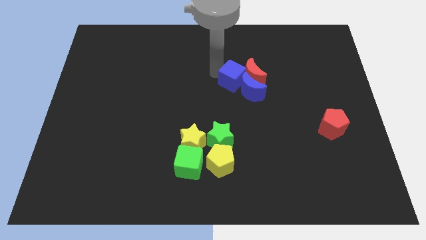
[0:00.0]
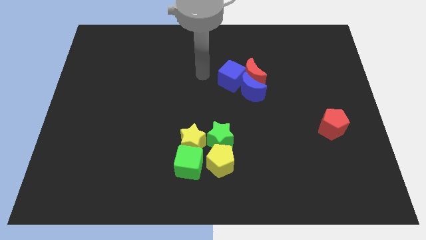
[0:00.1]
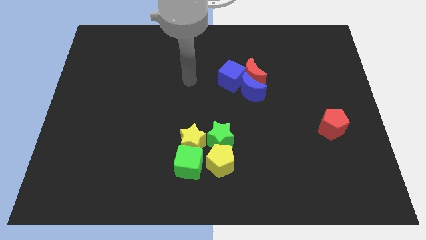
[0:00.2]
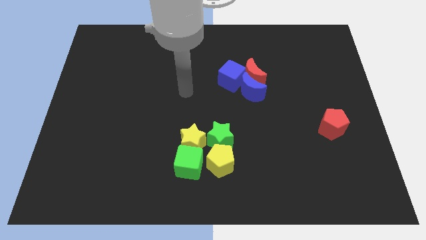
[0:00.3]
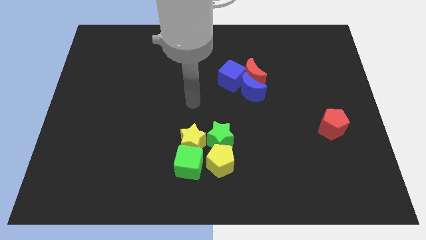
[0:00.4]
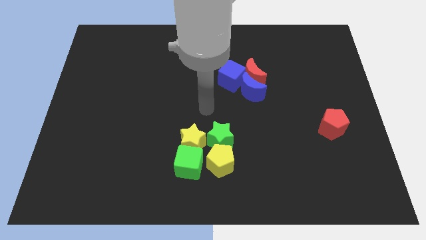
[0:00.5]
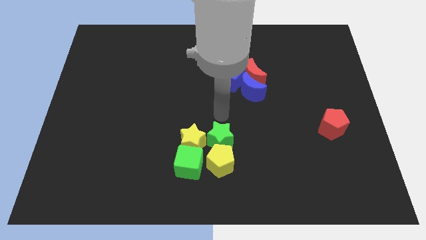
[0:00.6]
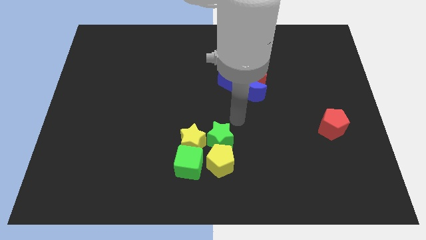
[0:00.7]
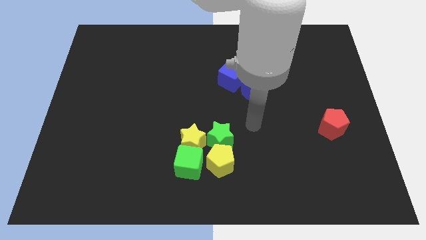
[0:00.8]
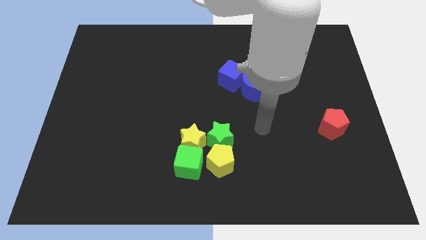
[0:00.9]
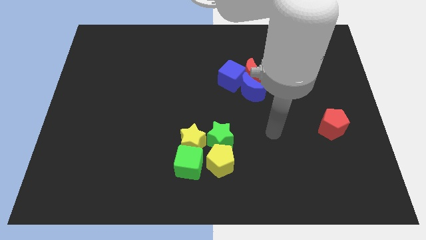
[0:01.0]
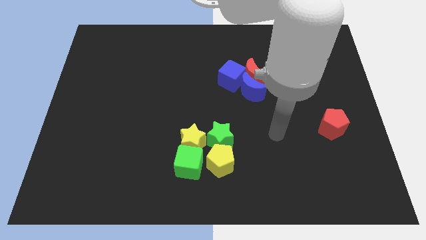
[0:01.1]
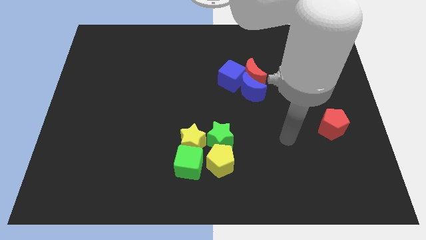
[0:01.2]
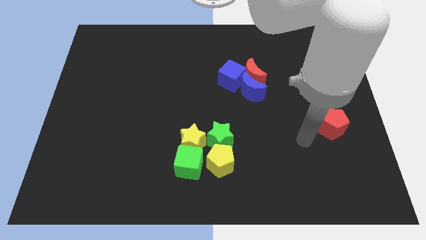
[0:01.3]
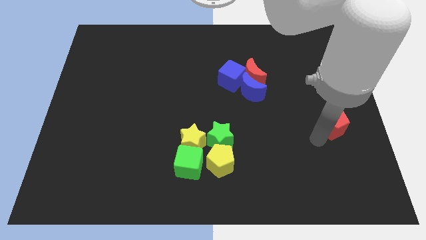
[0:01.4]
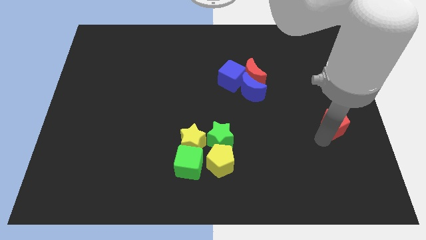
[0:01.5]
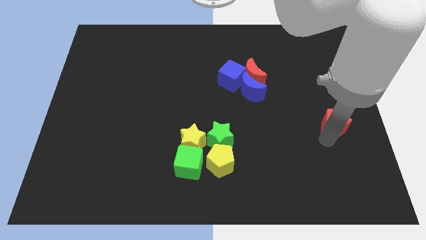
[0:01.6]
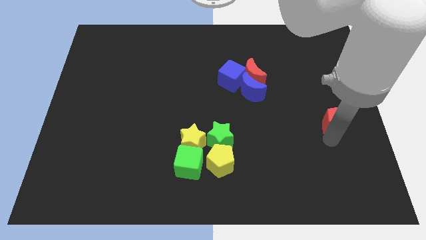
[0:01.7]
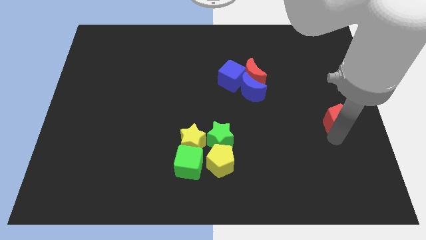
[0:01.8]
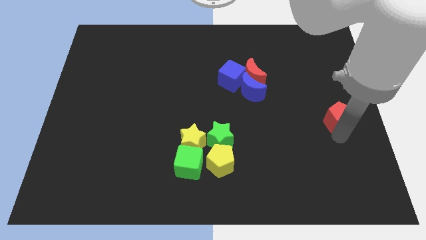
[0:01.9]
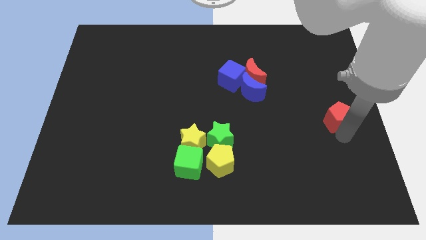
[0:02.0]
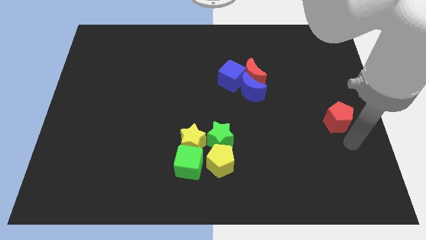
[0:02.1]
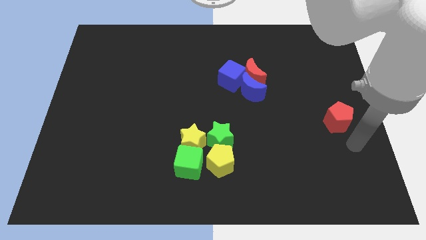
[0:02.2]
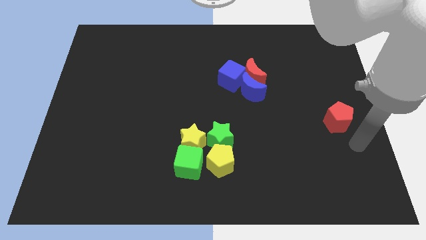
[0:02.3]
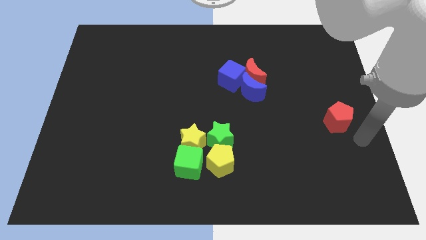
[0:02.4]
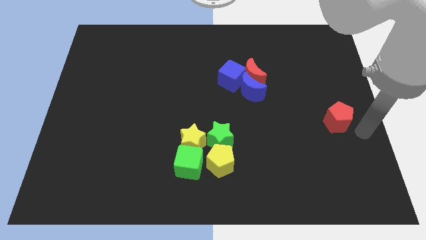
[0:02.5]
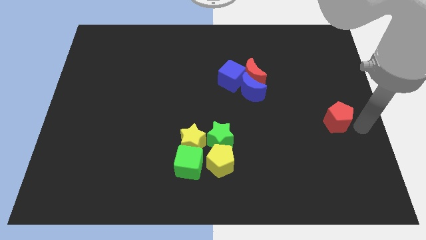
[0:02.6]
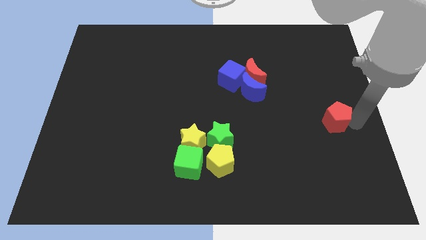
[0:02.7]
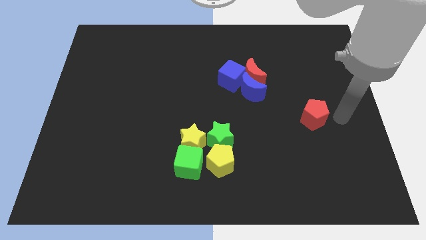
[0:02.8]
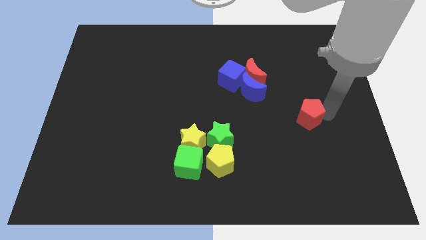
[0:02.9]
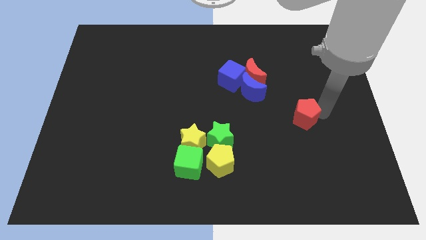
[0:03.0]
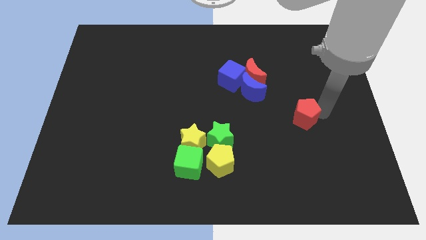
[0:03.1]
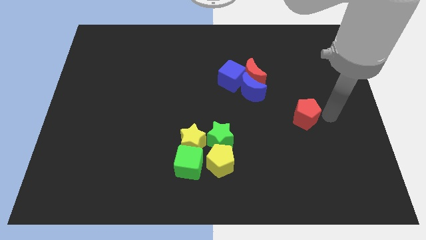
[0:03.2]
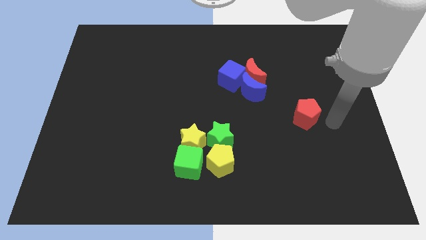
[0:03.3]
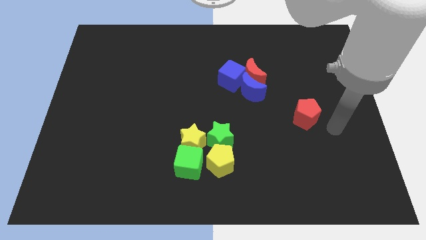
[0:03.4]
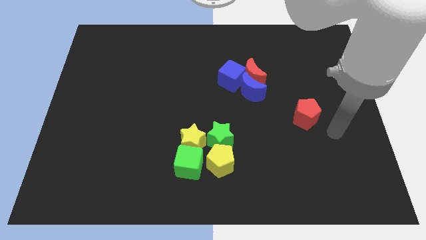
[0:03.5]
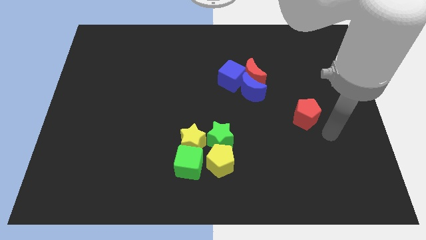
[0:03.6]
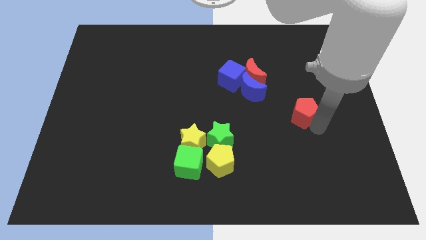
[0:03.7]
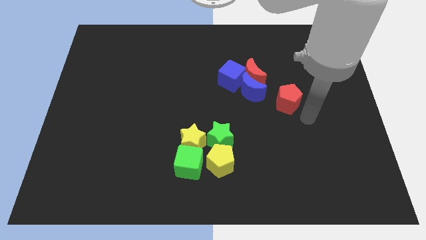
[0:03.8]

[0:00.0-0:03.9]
move the red pentagon towards the right of the blue crescent

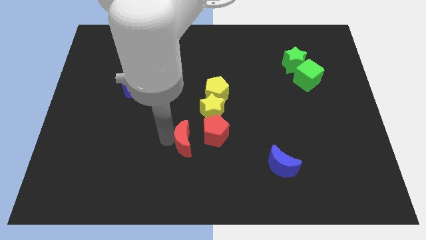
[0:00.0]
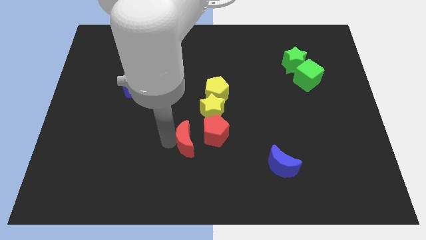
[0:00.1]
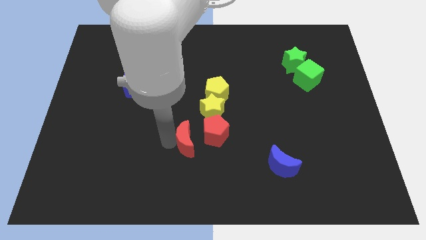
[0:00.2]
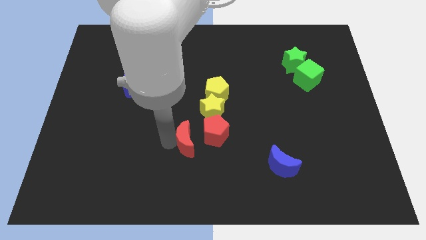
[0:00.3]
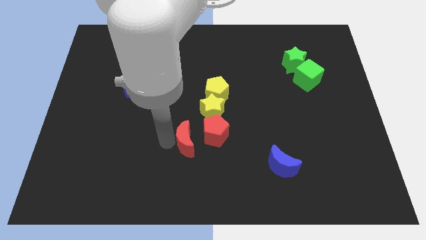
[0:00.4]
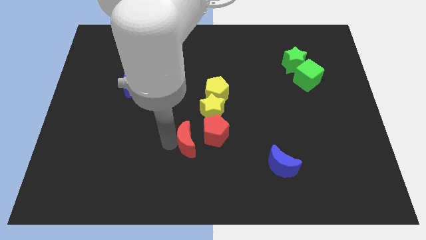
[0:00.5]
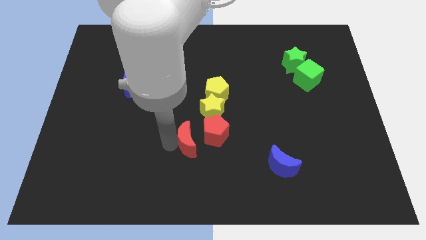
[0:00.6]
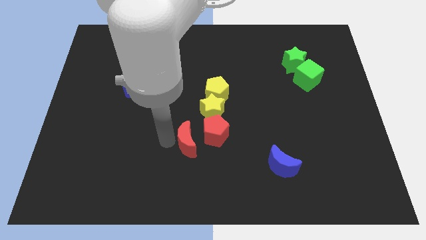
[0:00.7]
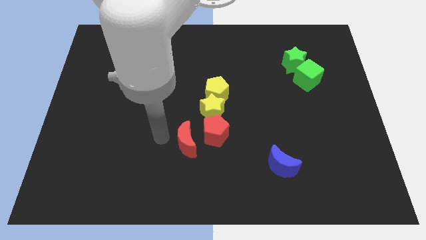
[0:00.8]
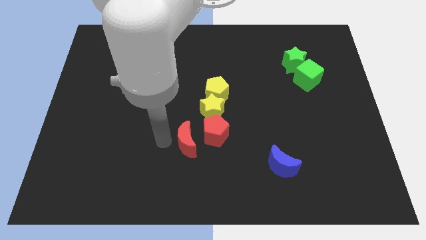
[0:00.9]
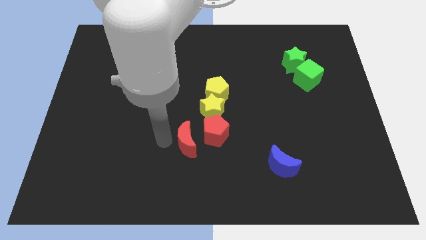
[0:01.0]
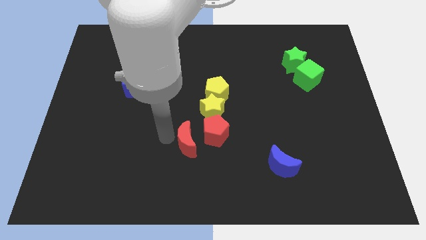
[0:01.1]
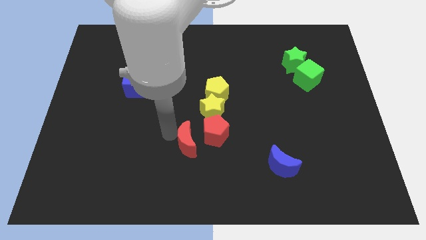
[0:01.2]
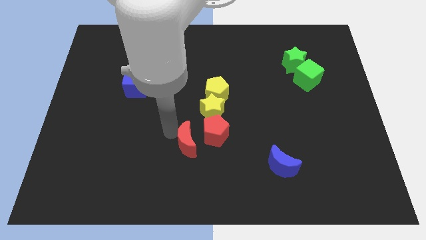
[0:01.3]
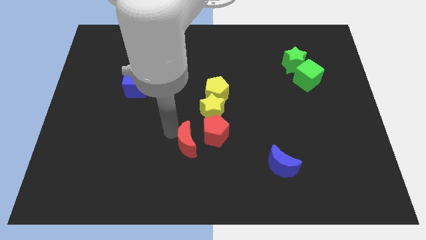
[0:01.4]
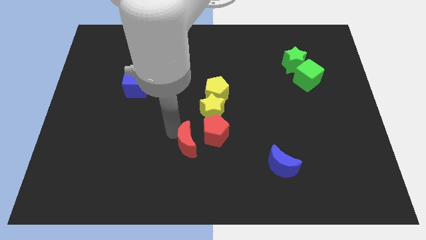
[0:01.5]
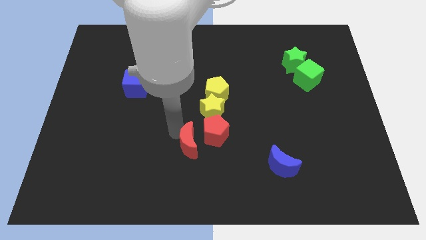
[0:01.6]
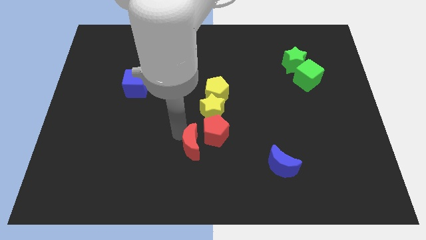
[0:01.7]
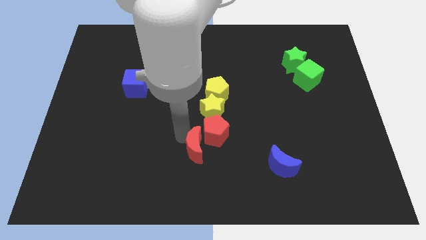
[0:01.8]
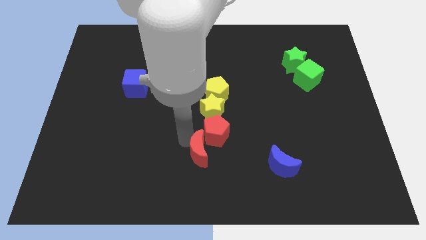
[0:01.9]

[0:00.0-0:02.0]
slide the red moon to the bottom left side of the red pentagon

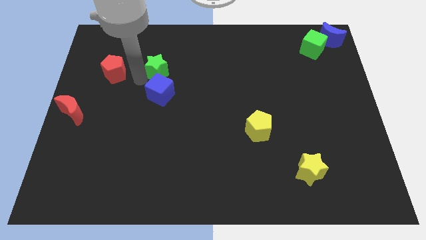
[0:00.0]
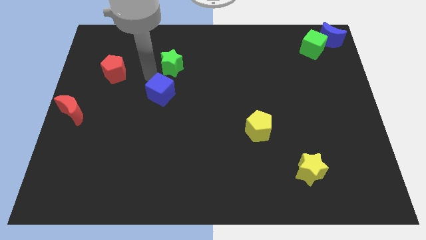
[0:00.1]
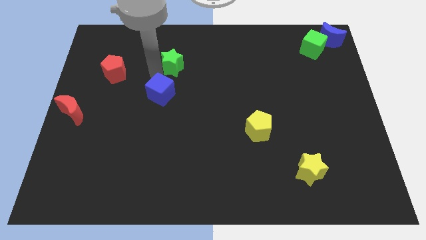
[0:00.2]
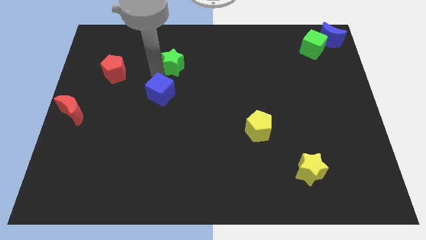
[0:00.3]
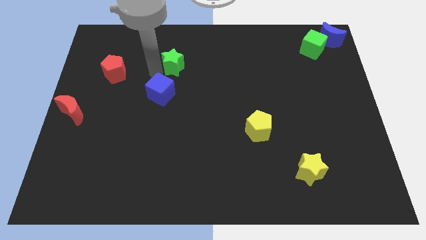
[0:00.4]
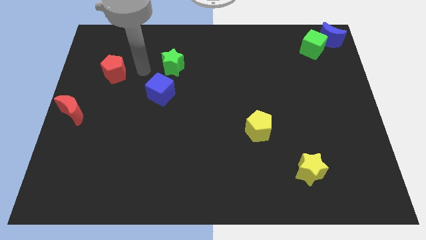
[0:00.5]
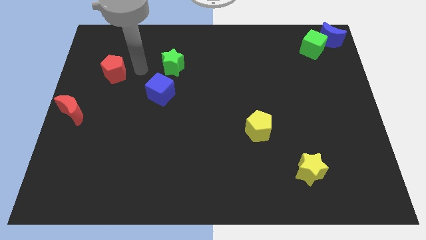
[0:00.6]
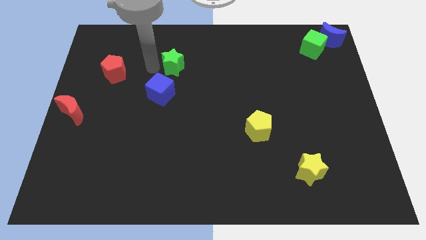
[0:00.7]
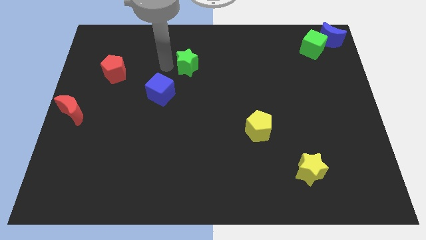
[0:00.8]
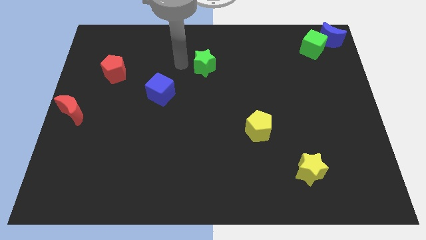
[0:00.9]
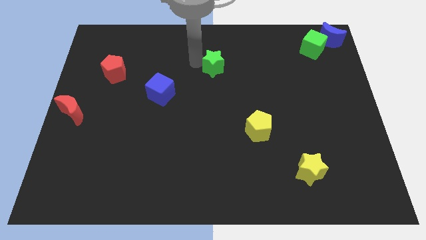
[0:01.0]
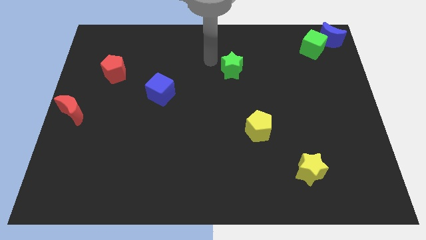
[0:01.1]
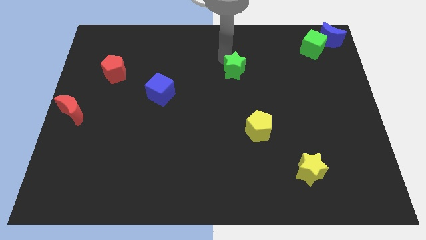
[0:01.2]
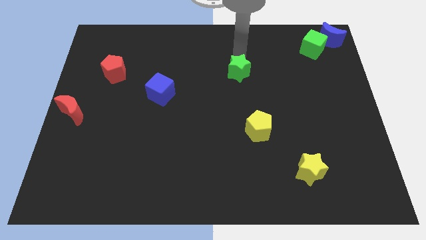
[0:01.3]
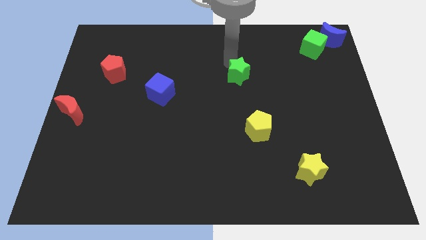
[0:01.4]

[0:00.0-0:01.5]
move the green star away from the blue cube

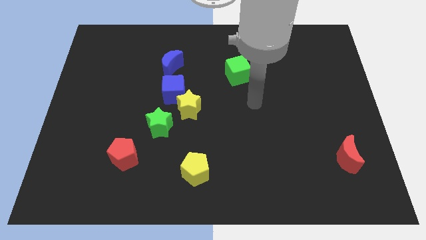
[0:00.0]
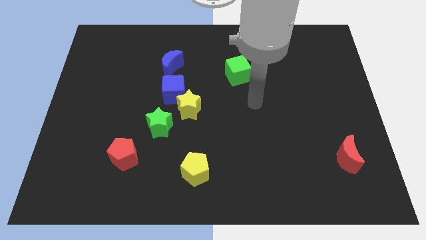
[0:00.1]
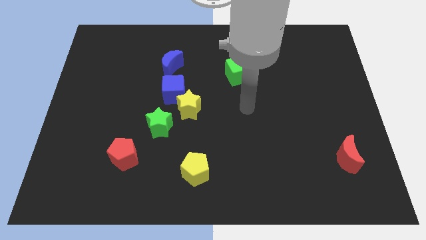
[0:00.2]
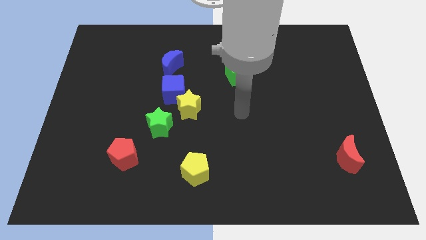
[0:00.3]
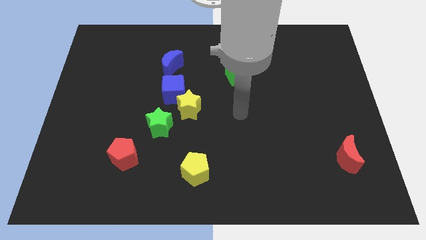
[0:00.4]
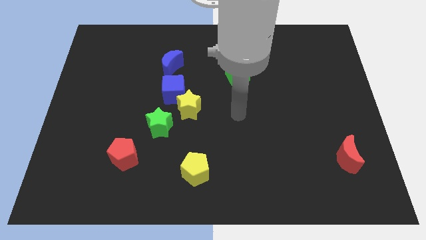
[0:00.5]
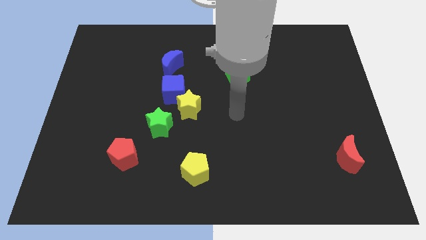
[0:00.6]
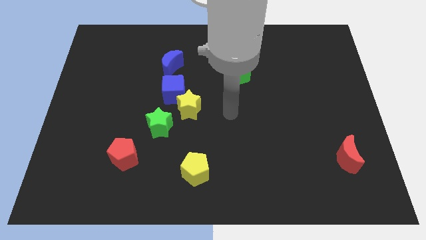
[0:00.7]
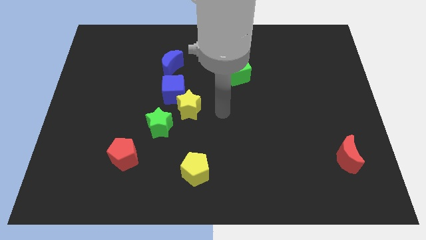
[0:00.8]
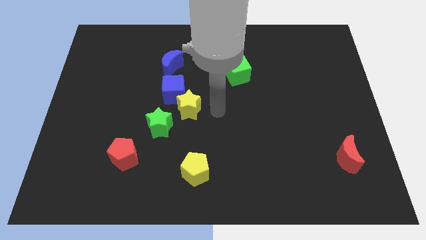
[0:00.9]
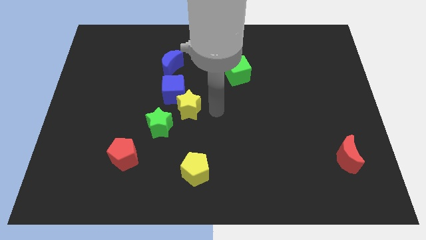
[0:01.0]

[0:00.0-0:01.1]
move your arm to the right side of the yellow star

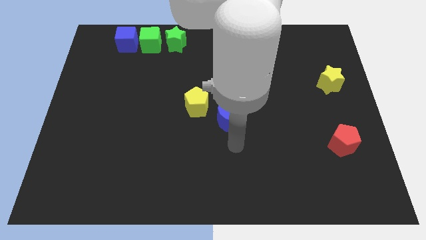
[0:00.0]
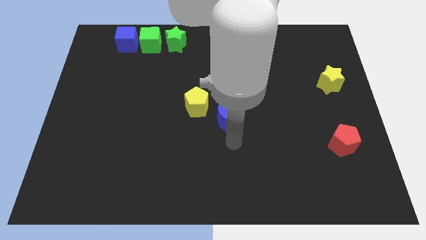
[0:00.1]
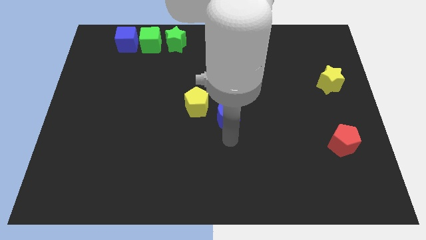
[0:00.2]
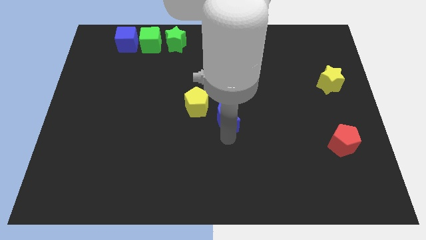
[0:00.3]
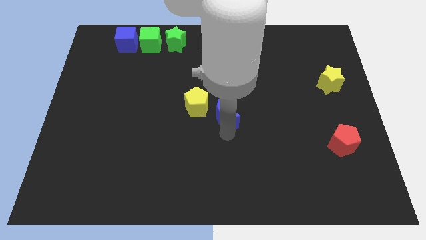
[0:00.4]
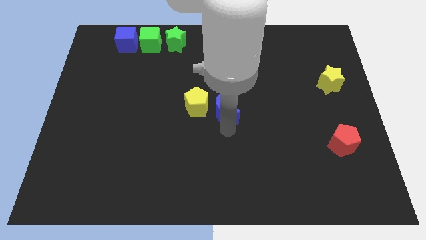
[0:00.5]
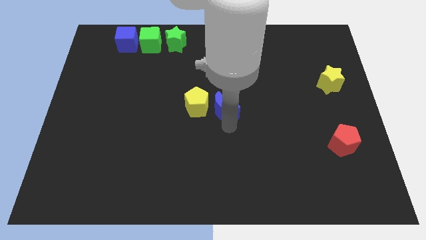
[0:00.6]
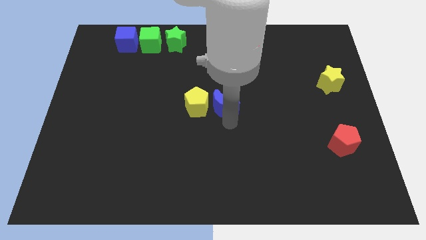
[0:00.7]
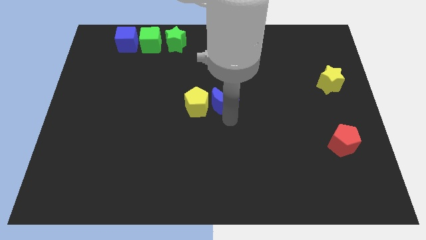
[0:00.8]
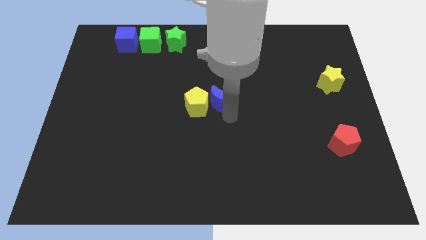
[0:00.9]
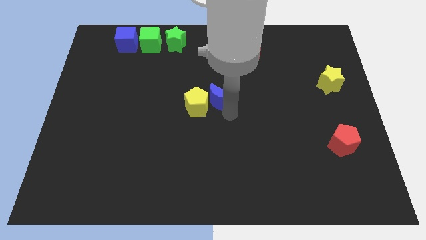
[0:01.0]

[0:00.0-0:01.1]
move blue moon to the center
